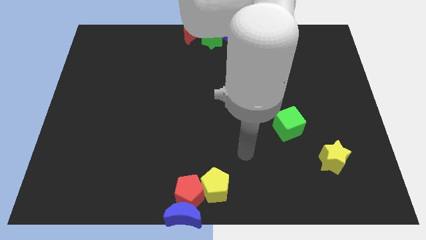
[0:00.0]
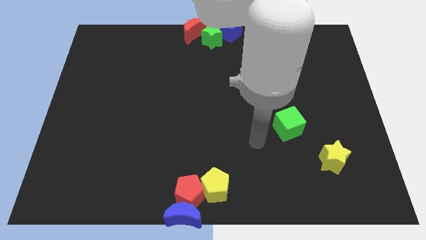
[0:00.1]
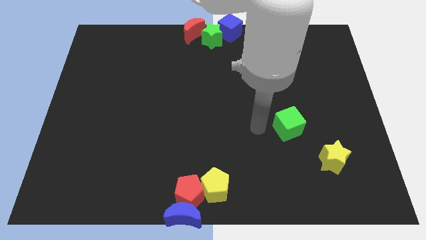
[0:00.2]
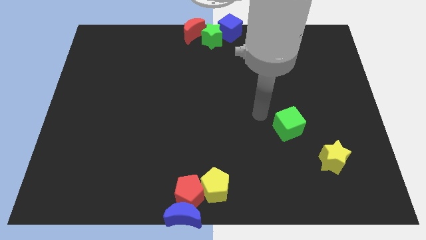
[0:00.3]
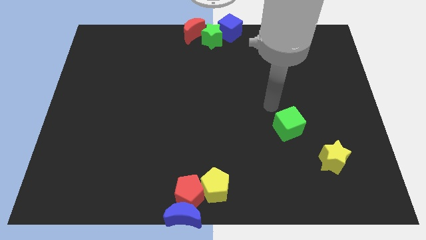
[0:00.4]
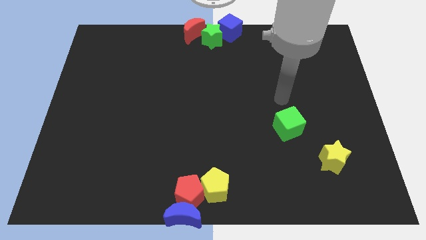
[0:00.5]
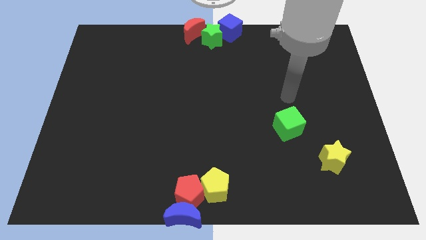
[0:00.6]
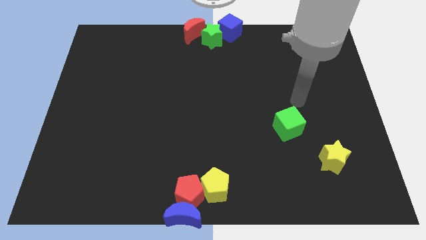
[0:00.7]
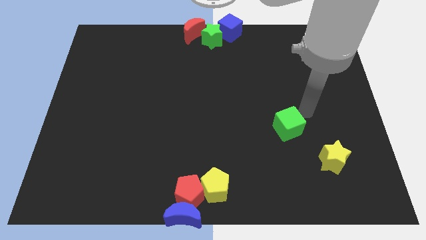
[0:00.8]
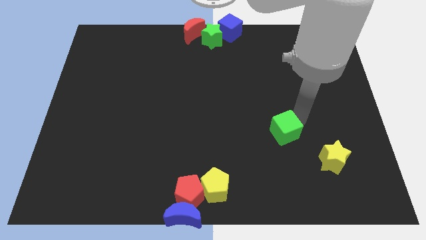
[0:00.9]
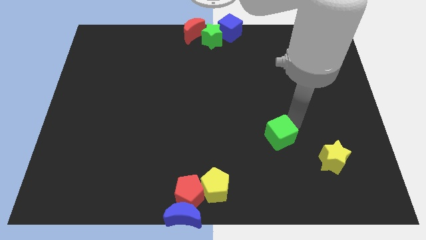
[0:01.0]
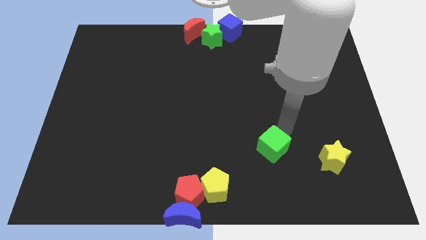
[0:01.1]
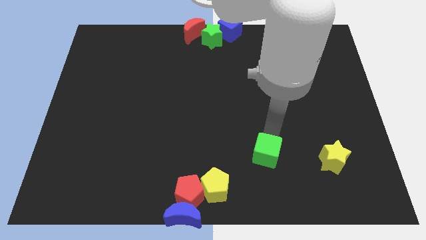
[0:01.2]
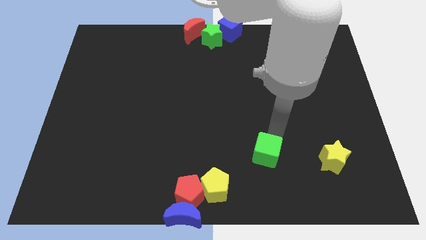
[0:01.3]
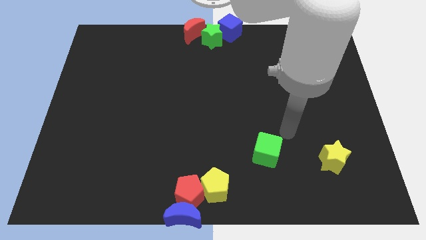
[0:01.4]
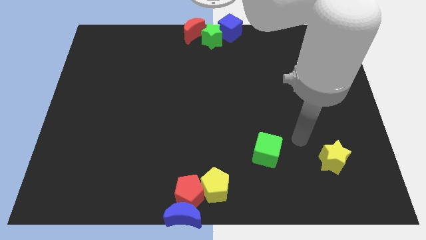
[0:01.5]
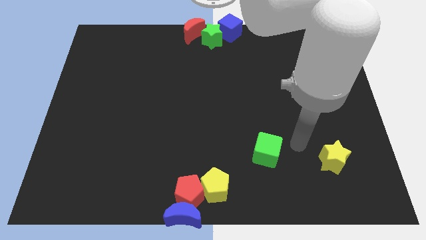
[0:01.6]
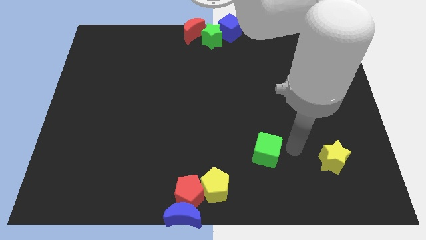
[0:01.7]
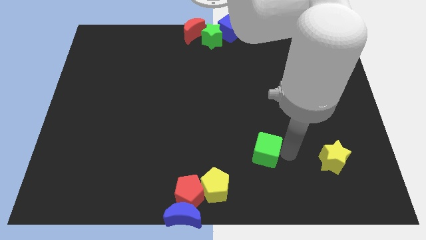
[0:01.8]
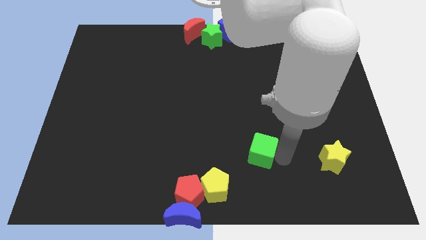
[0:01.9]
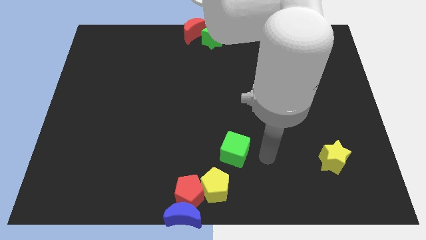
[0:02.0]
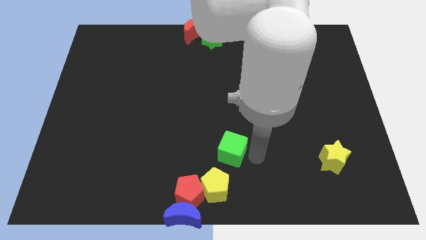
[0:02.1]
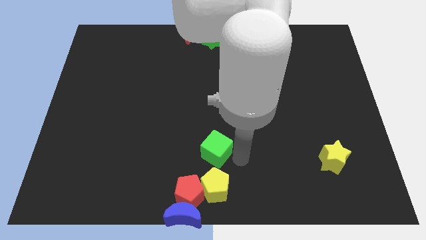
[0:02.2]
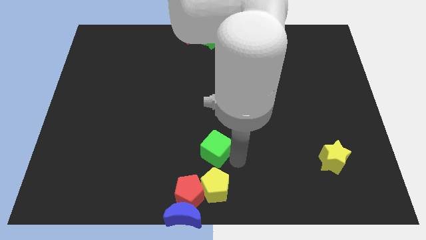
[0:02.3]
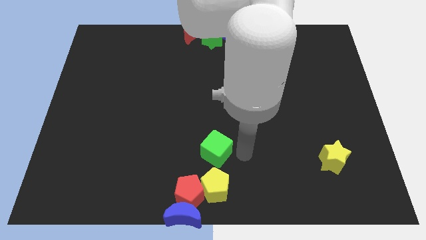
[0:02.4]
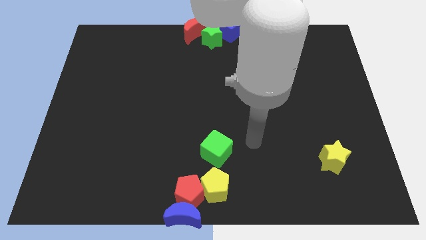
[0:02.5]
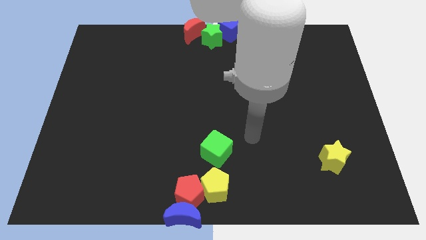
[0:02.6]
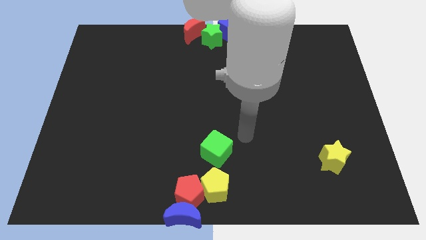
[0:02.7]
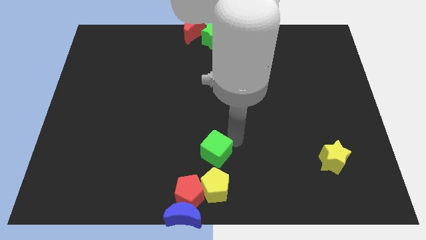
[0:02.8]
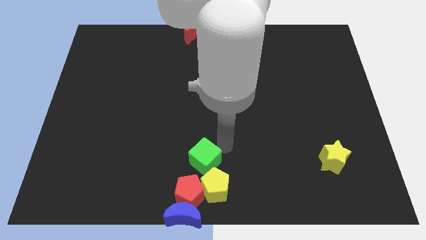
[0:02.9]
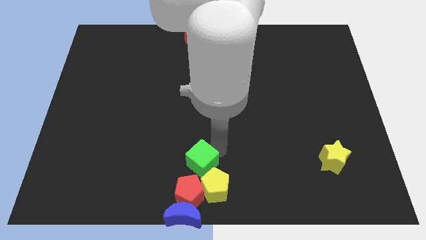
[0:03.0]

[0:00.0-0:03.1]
push green cube to the group of blocks

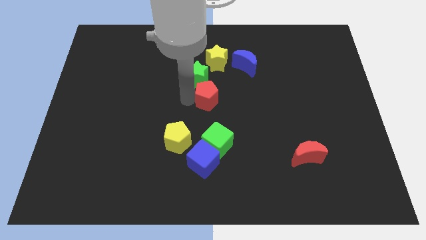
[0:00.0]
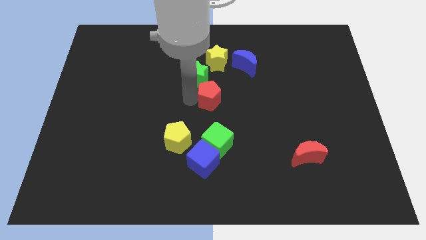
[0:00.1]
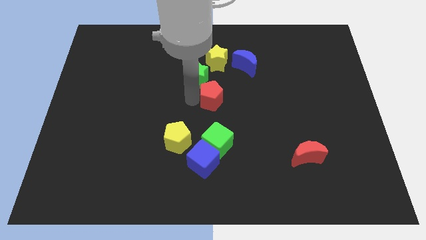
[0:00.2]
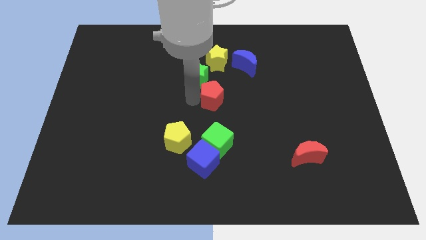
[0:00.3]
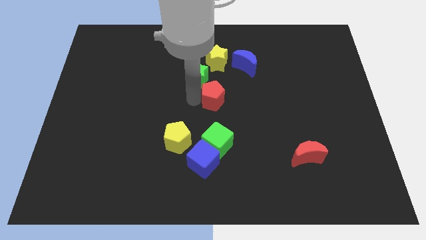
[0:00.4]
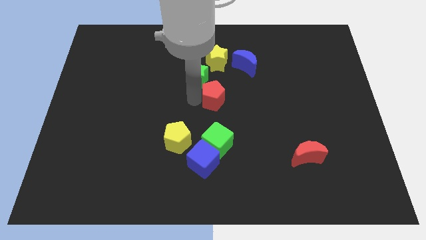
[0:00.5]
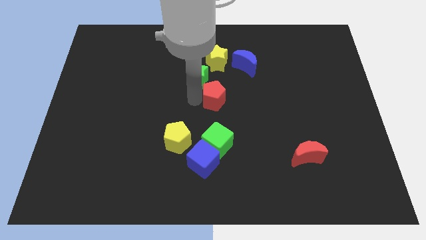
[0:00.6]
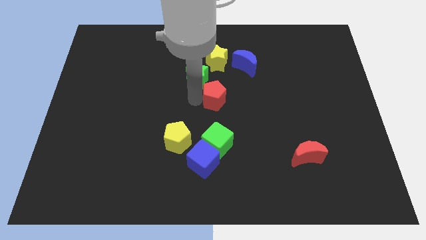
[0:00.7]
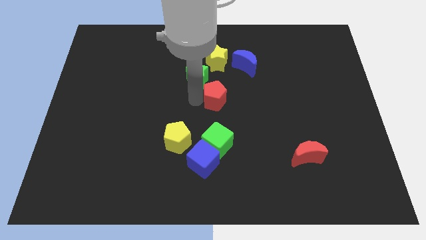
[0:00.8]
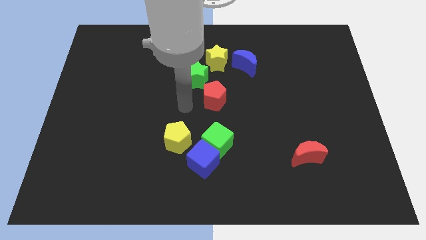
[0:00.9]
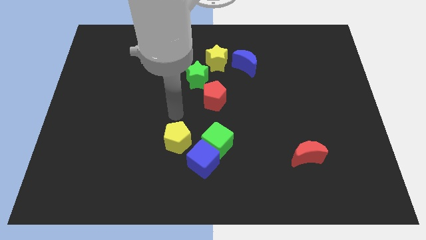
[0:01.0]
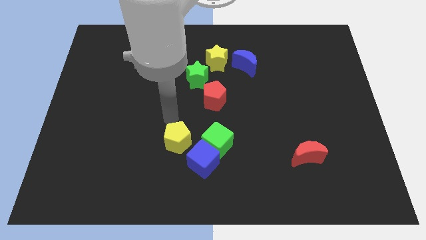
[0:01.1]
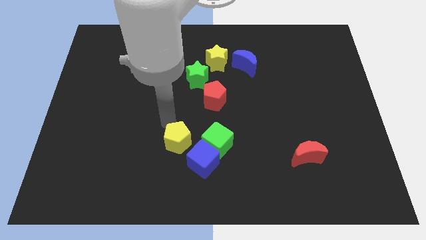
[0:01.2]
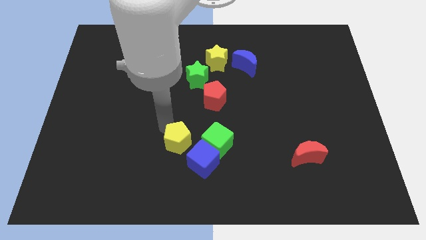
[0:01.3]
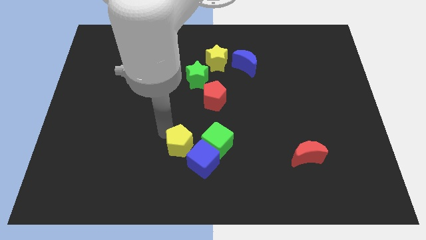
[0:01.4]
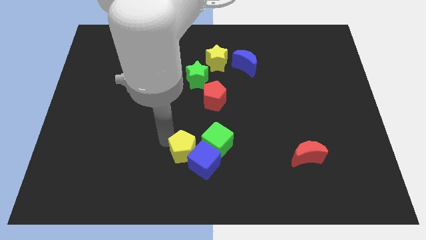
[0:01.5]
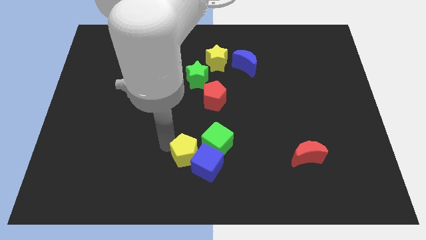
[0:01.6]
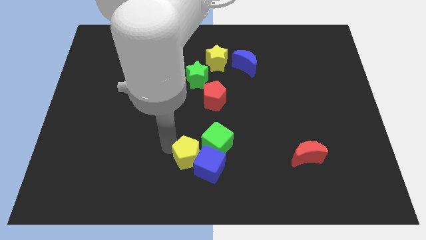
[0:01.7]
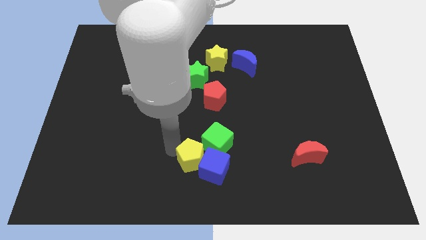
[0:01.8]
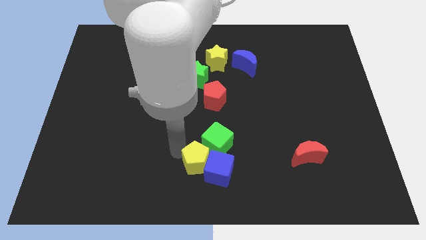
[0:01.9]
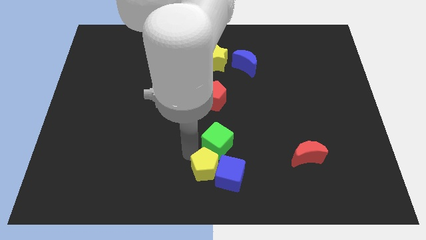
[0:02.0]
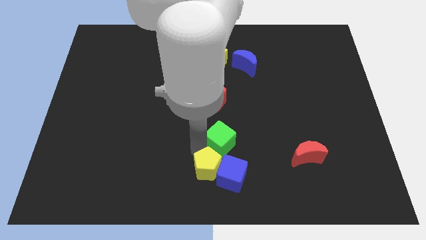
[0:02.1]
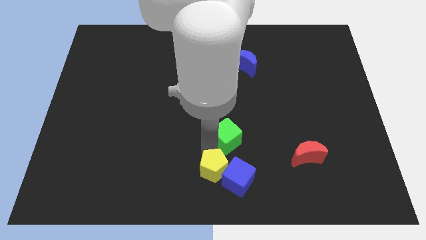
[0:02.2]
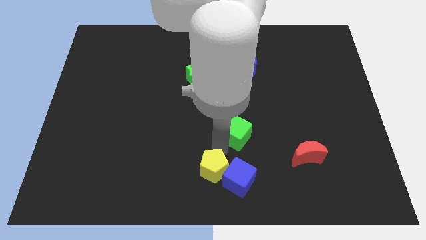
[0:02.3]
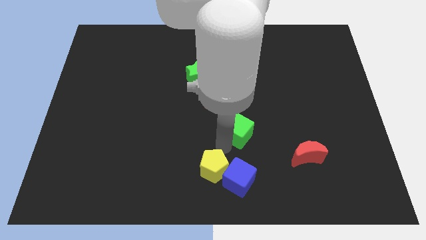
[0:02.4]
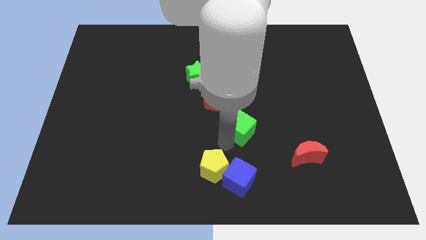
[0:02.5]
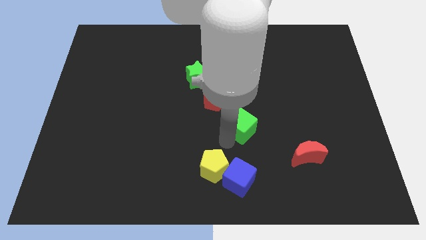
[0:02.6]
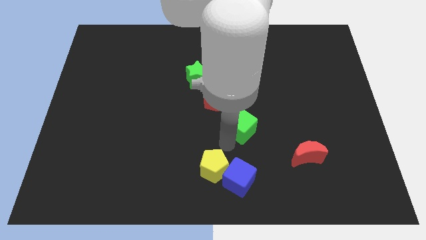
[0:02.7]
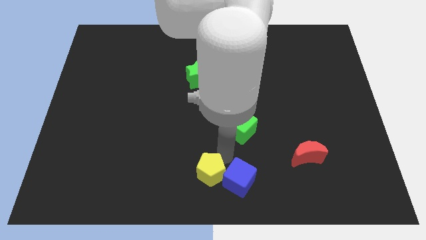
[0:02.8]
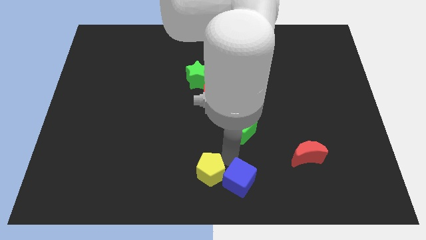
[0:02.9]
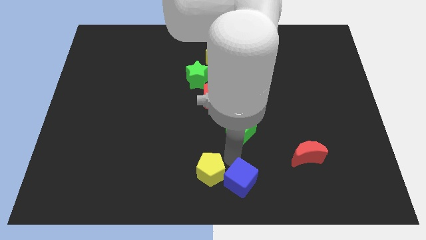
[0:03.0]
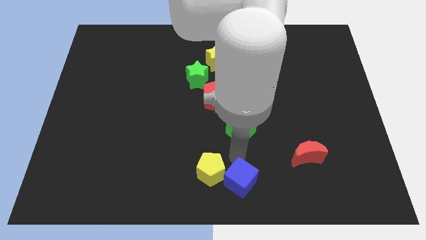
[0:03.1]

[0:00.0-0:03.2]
push yellow pentagon into blue cube

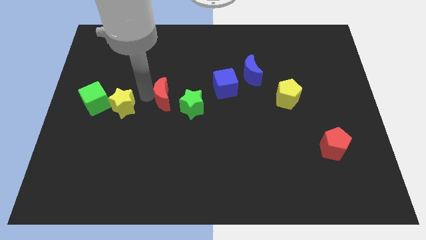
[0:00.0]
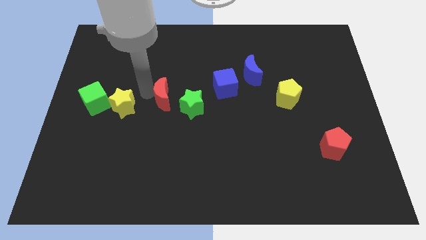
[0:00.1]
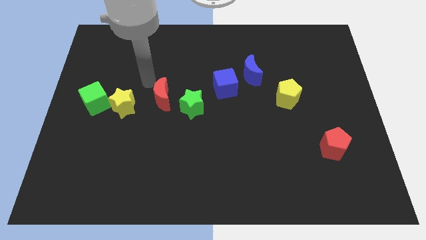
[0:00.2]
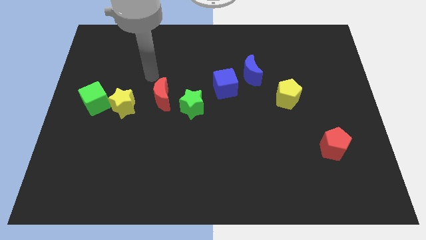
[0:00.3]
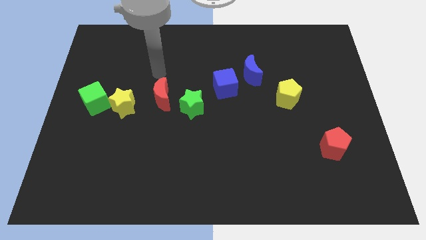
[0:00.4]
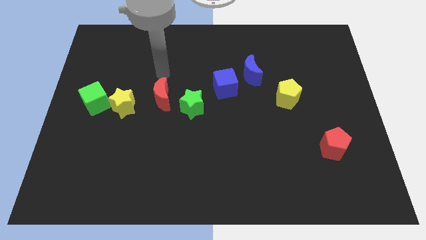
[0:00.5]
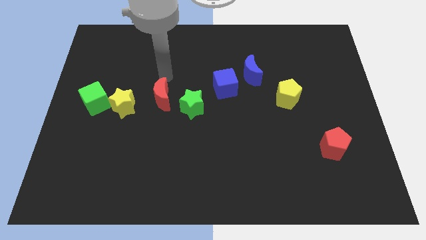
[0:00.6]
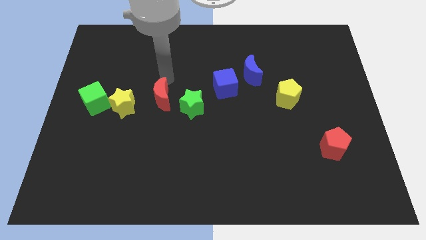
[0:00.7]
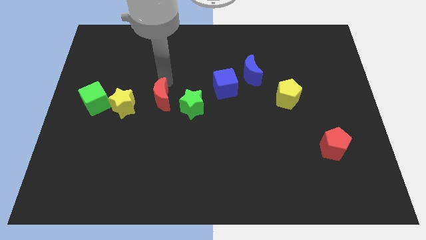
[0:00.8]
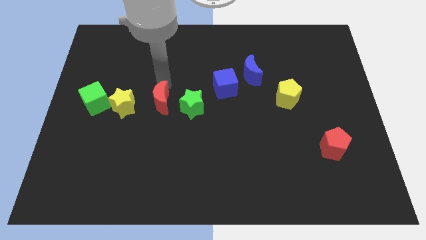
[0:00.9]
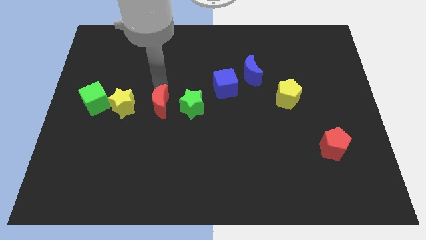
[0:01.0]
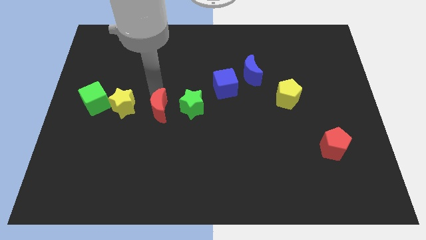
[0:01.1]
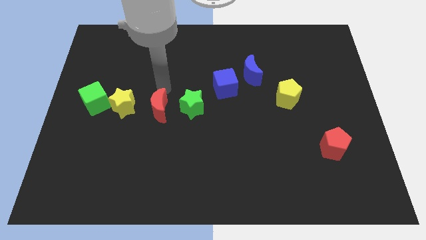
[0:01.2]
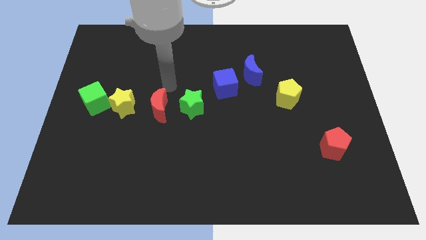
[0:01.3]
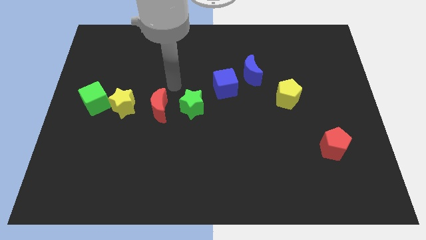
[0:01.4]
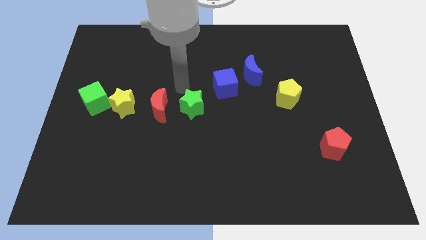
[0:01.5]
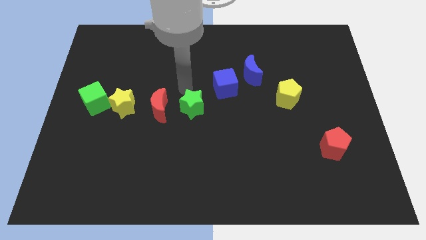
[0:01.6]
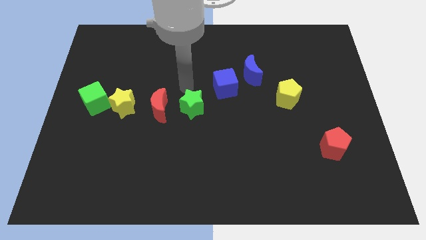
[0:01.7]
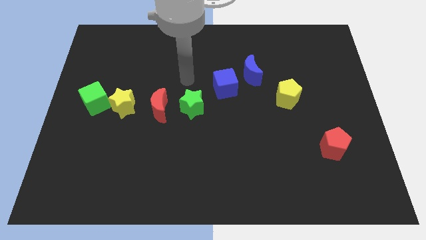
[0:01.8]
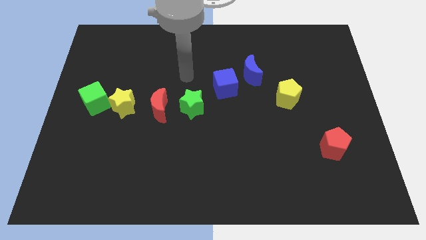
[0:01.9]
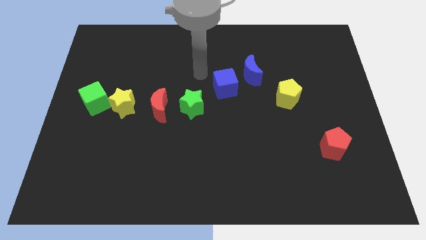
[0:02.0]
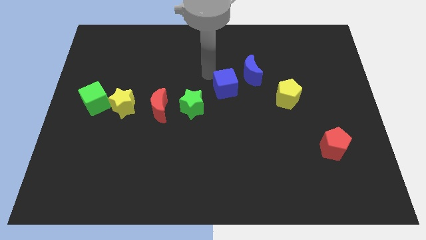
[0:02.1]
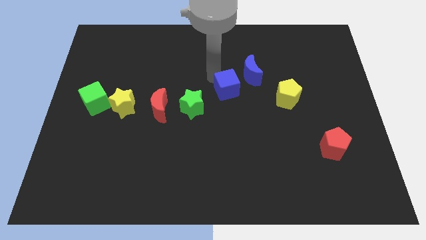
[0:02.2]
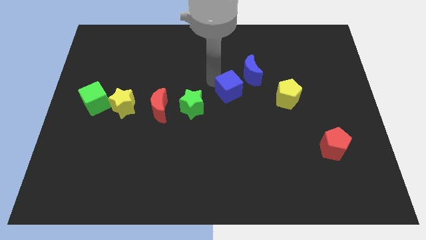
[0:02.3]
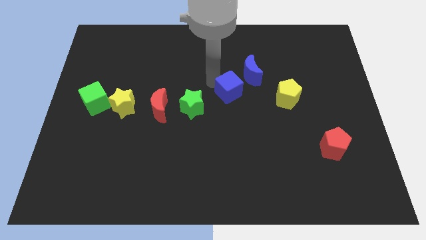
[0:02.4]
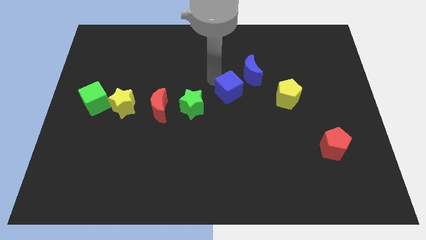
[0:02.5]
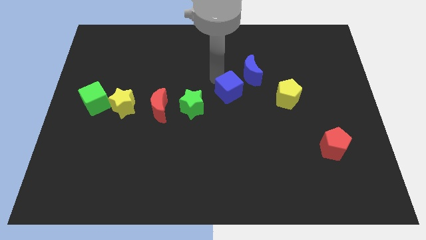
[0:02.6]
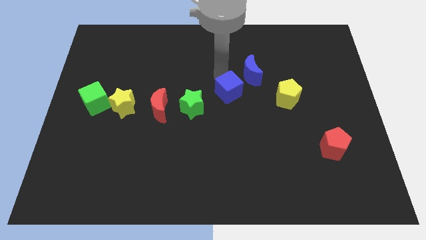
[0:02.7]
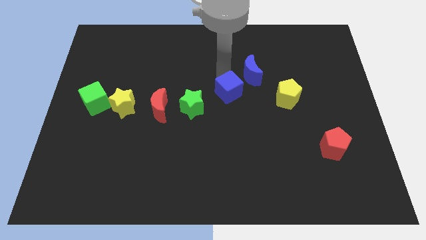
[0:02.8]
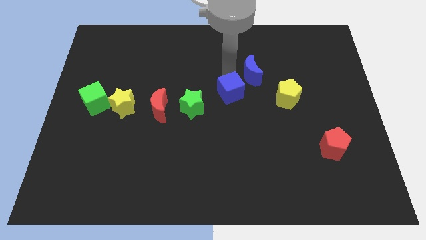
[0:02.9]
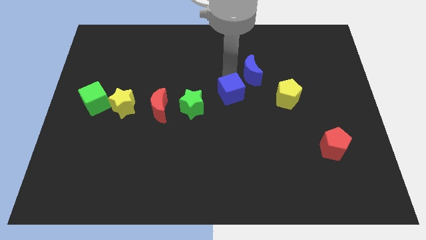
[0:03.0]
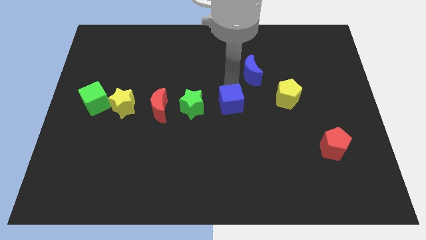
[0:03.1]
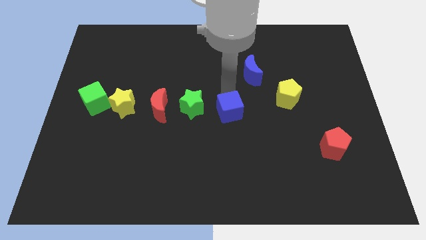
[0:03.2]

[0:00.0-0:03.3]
move the blue cube to the center of the board
